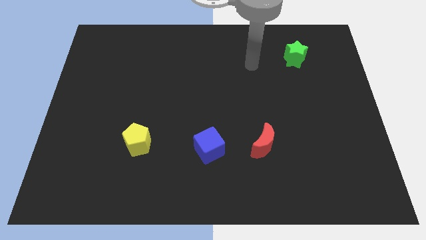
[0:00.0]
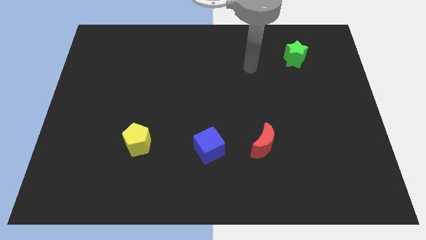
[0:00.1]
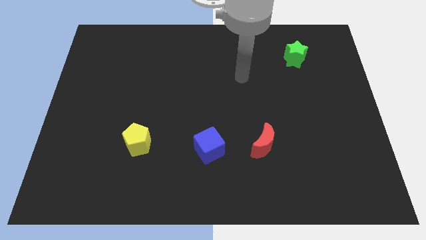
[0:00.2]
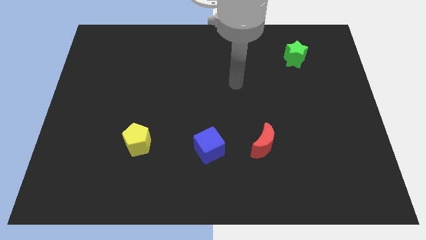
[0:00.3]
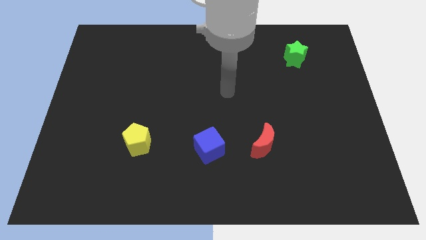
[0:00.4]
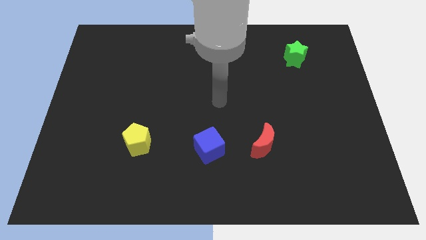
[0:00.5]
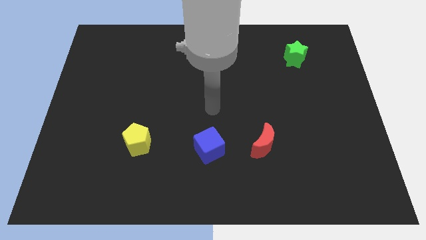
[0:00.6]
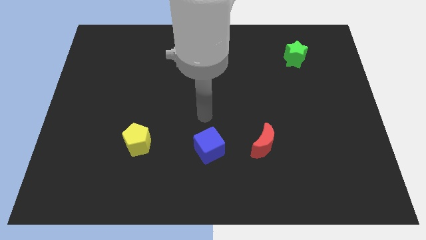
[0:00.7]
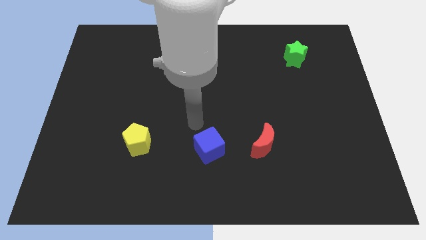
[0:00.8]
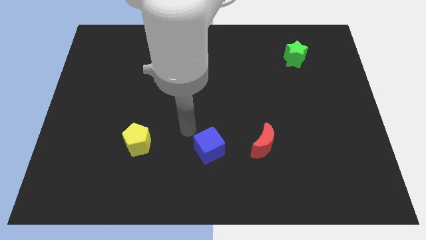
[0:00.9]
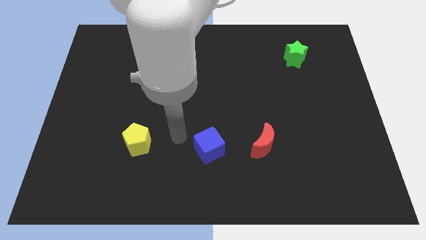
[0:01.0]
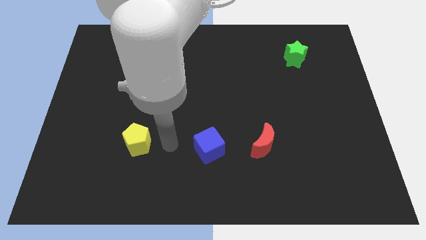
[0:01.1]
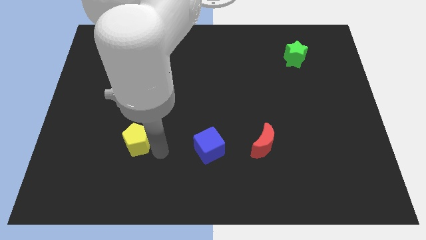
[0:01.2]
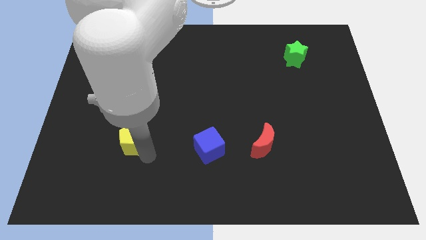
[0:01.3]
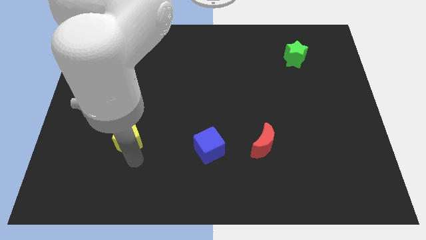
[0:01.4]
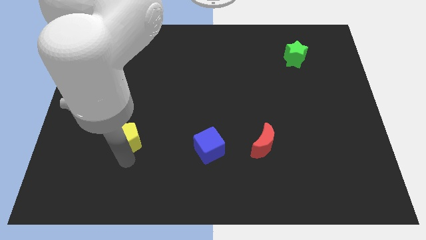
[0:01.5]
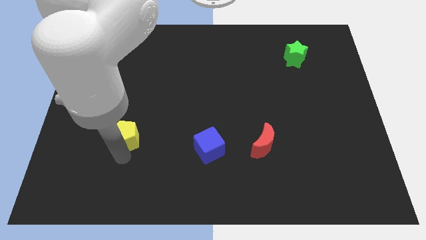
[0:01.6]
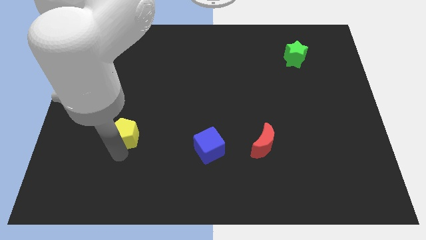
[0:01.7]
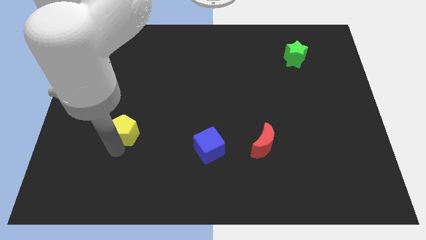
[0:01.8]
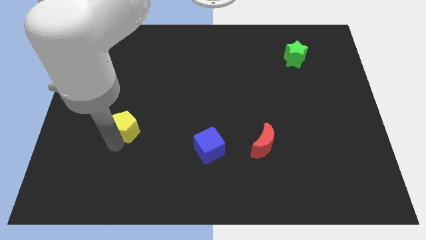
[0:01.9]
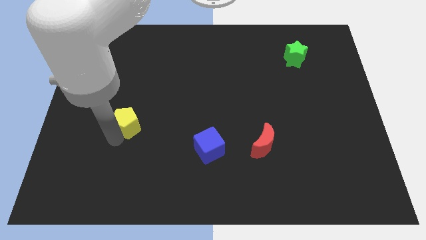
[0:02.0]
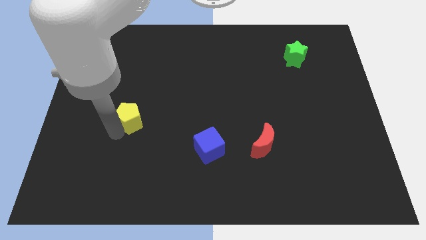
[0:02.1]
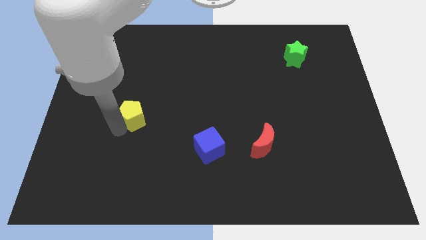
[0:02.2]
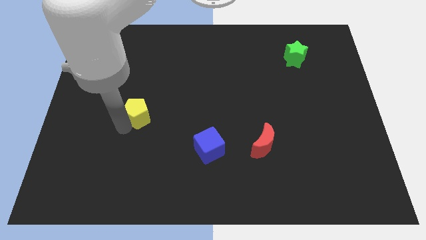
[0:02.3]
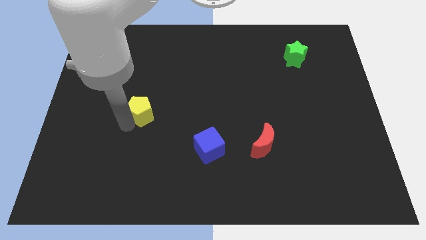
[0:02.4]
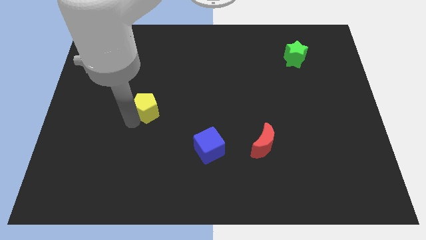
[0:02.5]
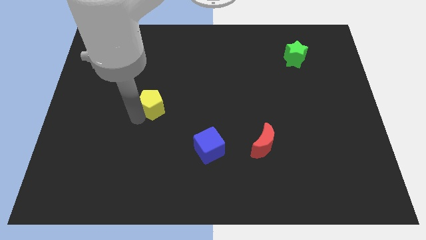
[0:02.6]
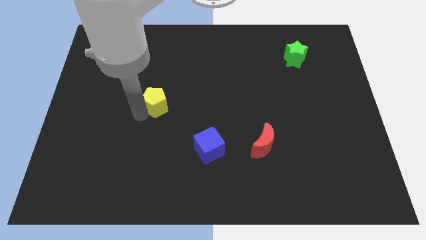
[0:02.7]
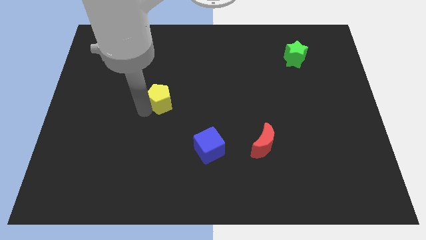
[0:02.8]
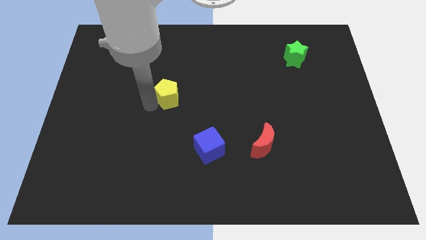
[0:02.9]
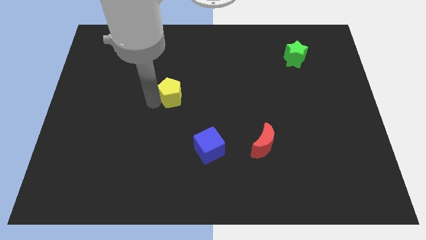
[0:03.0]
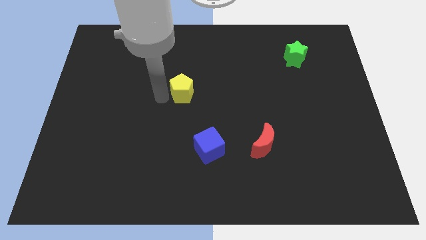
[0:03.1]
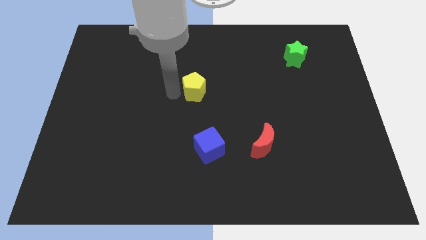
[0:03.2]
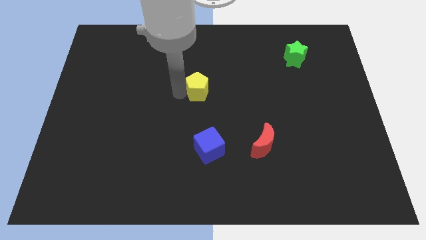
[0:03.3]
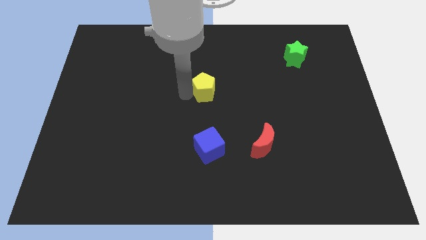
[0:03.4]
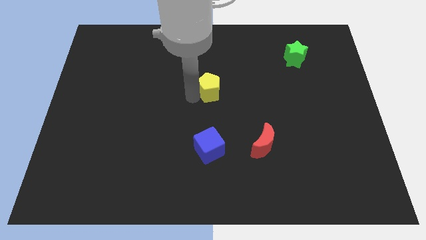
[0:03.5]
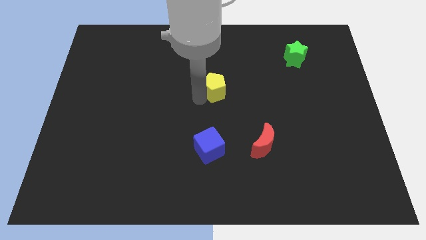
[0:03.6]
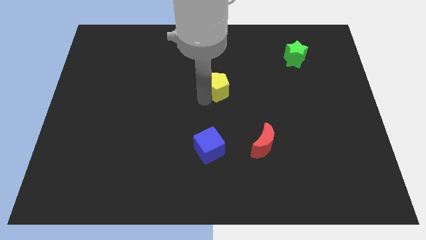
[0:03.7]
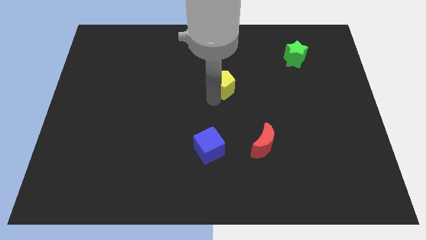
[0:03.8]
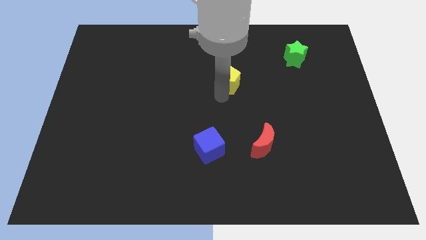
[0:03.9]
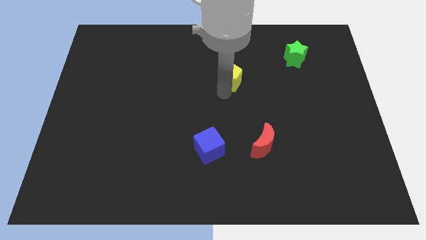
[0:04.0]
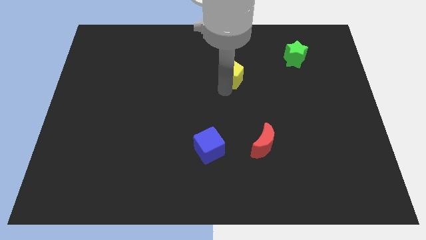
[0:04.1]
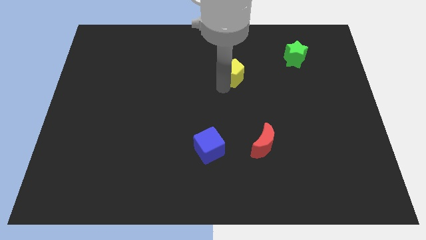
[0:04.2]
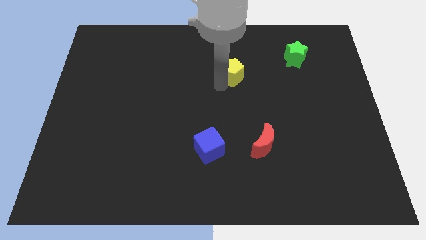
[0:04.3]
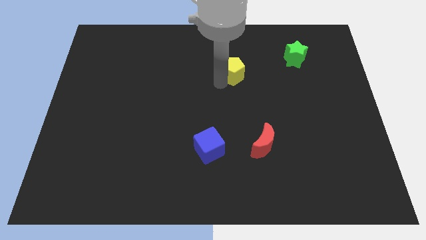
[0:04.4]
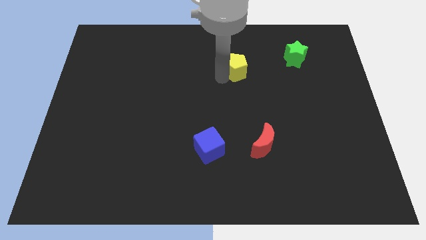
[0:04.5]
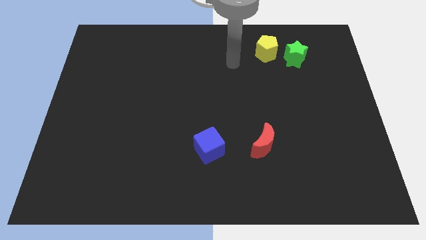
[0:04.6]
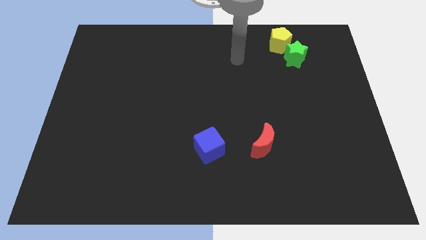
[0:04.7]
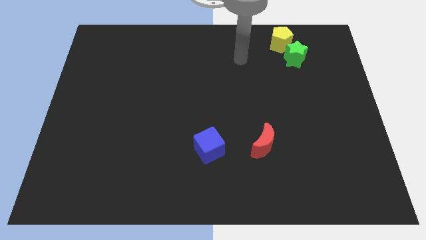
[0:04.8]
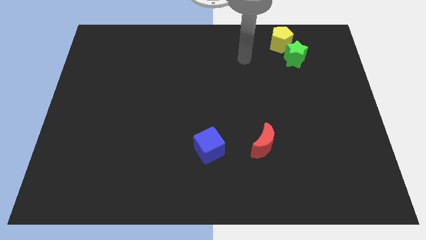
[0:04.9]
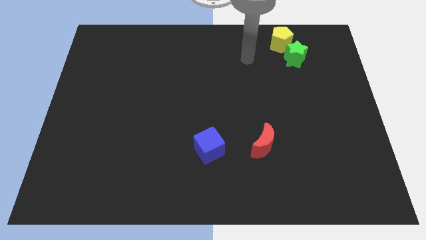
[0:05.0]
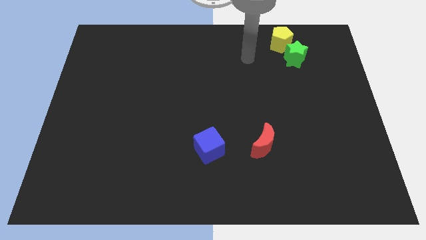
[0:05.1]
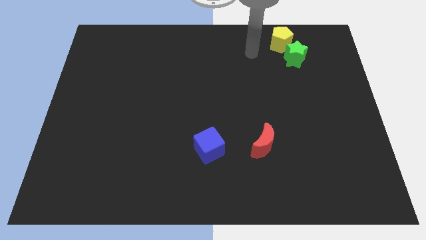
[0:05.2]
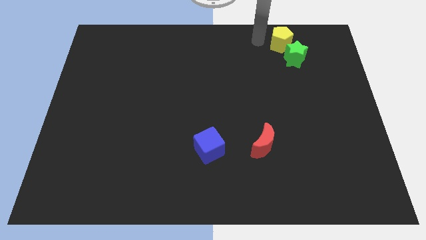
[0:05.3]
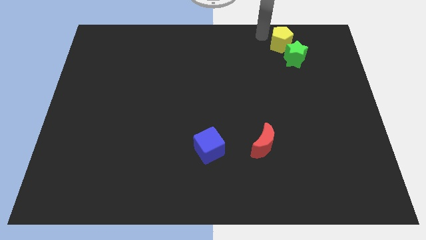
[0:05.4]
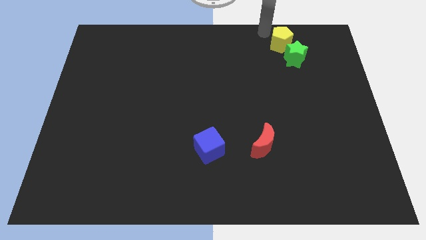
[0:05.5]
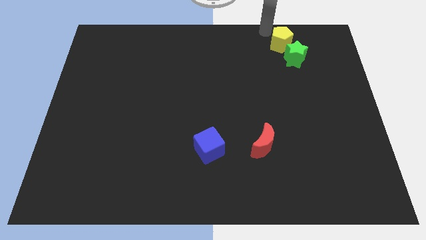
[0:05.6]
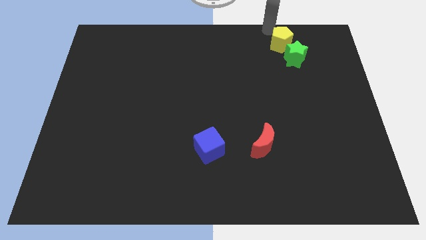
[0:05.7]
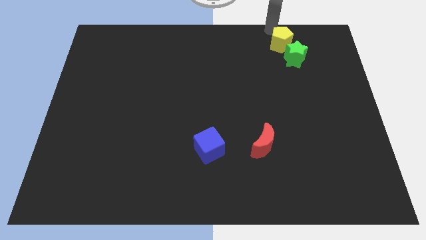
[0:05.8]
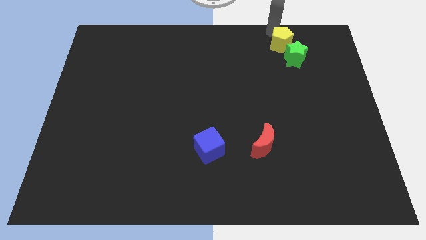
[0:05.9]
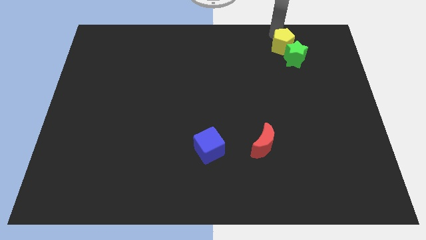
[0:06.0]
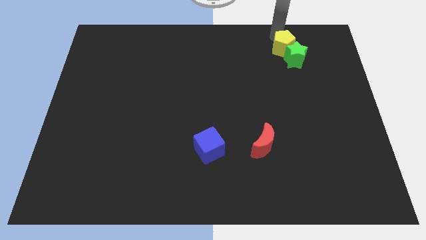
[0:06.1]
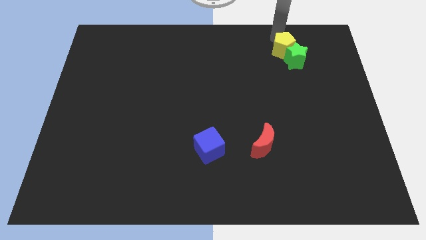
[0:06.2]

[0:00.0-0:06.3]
move the yellow block next to the green star

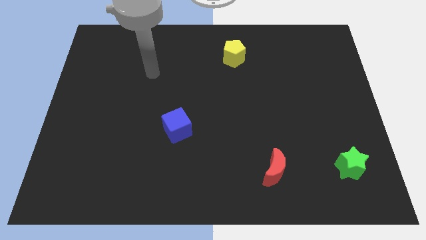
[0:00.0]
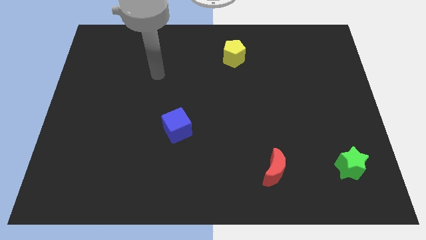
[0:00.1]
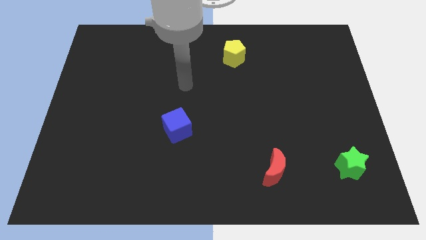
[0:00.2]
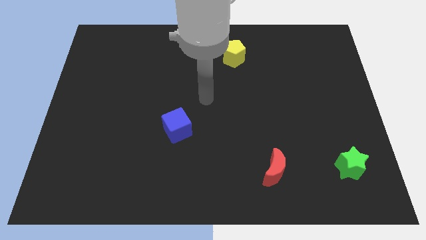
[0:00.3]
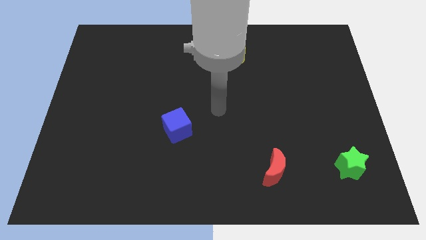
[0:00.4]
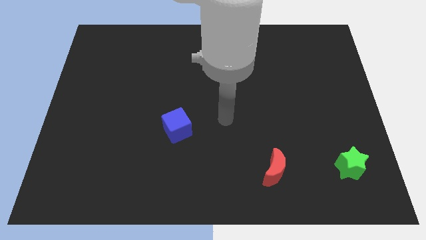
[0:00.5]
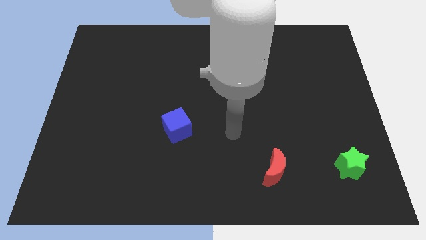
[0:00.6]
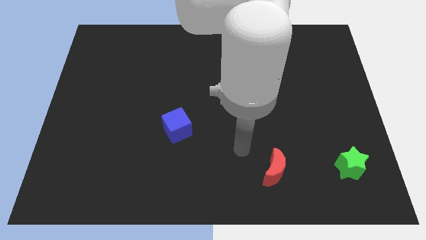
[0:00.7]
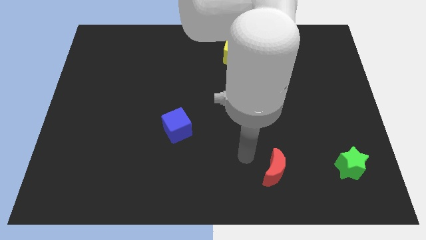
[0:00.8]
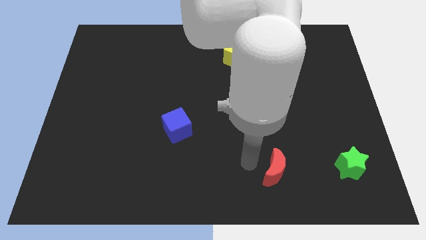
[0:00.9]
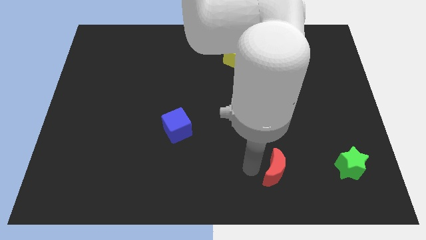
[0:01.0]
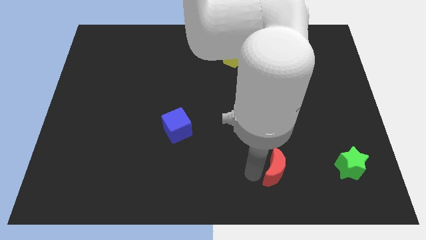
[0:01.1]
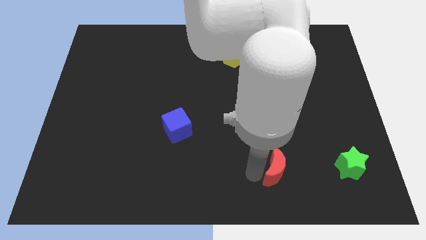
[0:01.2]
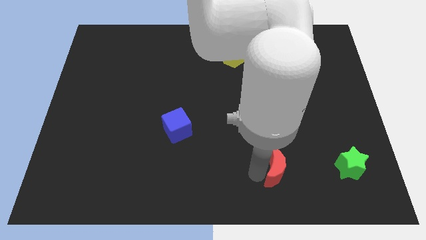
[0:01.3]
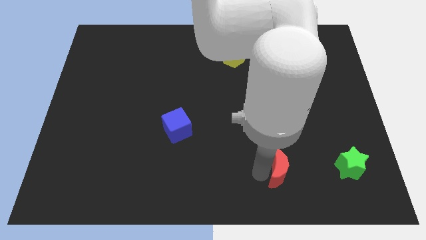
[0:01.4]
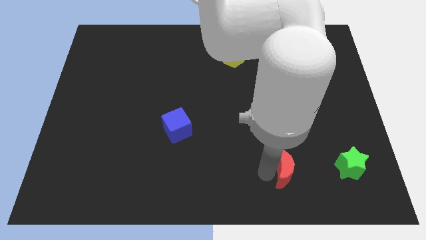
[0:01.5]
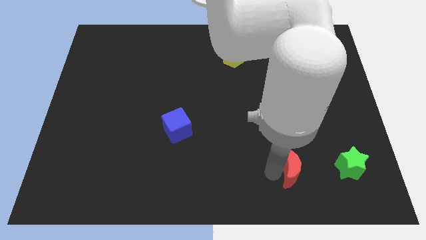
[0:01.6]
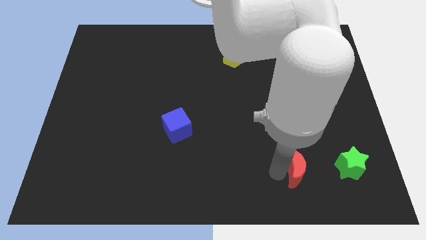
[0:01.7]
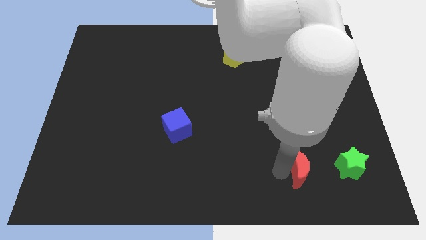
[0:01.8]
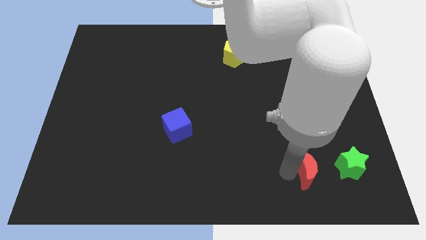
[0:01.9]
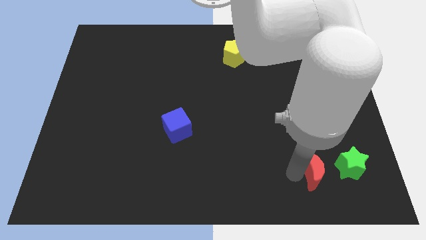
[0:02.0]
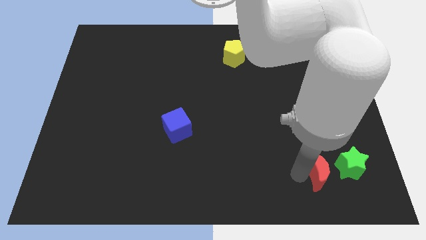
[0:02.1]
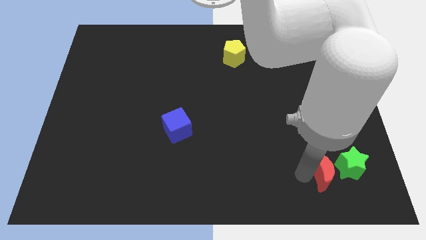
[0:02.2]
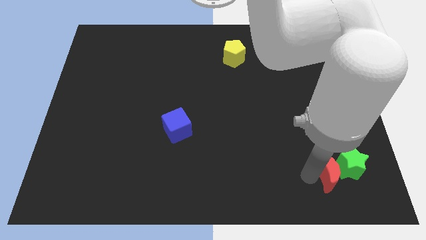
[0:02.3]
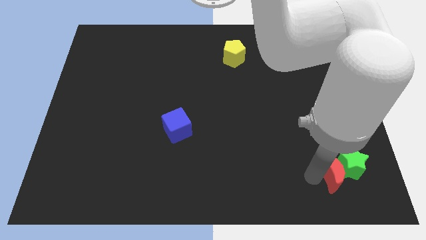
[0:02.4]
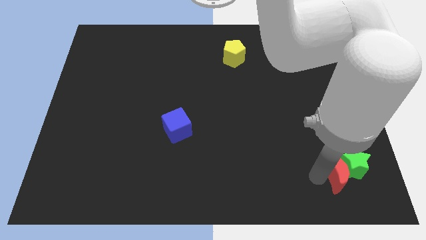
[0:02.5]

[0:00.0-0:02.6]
slide the red block towards the green star
